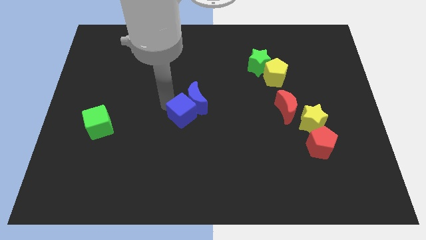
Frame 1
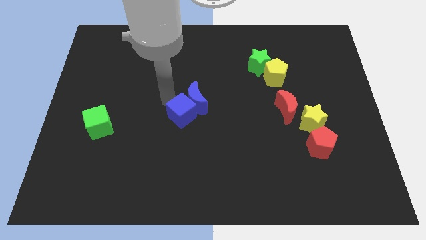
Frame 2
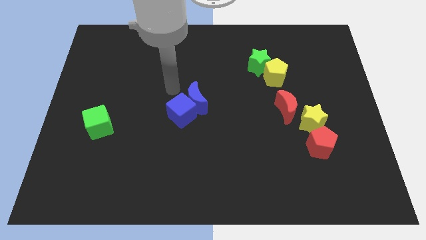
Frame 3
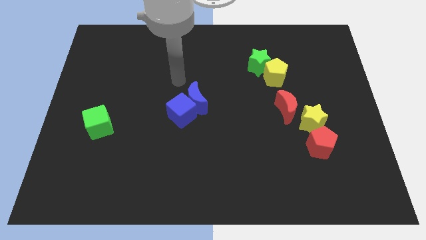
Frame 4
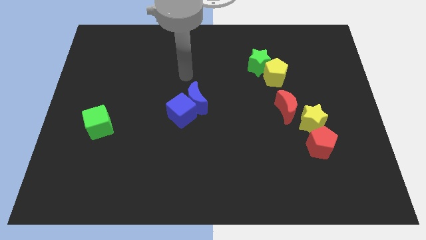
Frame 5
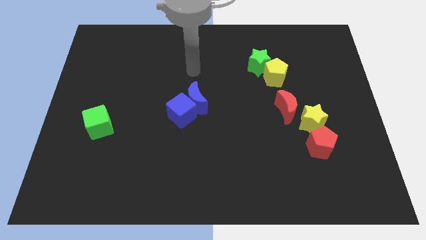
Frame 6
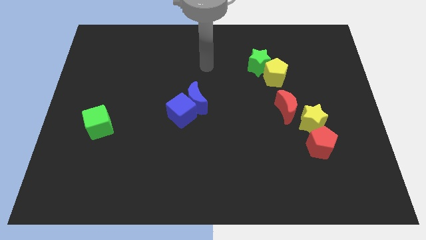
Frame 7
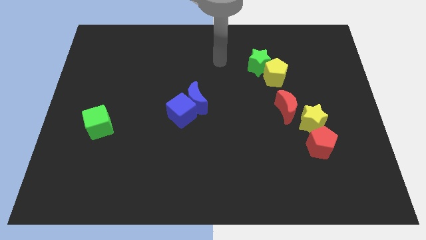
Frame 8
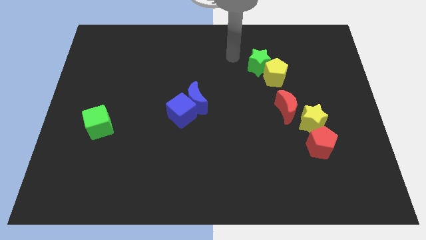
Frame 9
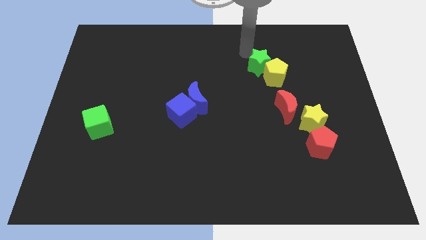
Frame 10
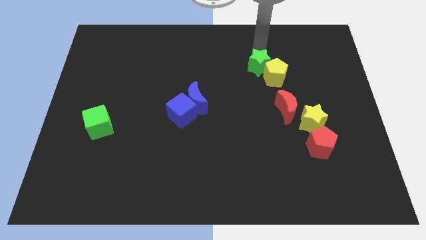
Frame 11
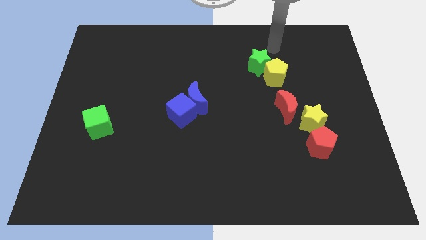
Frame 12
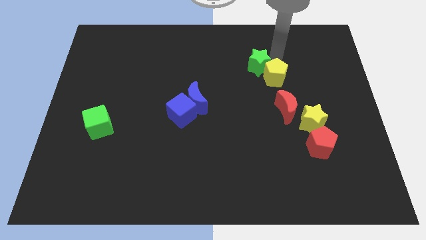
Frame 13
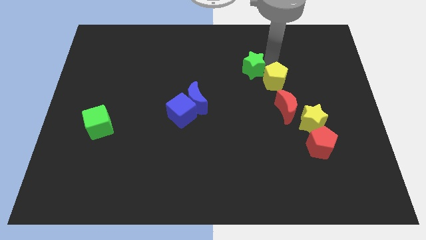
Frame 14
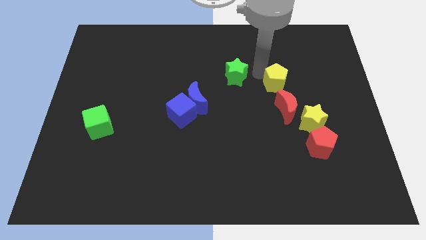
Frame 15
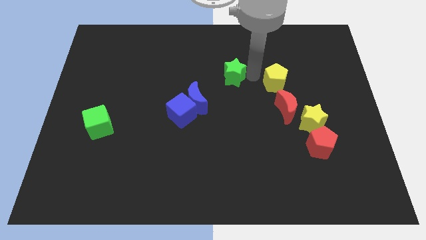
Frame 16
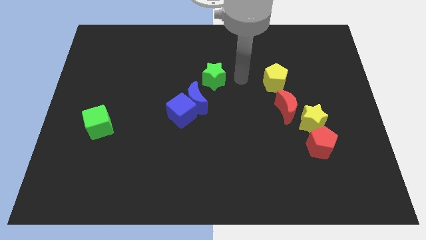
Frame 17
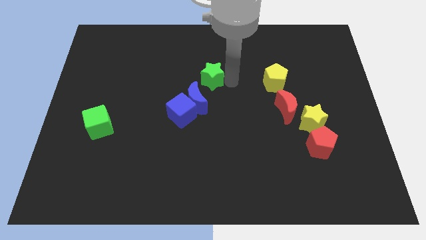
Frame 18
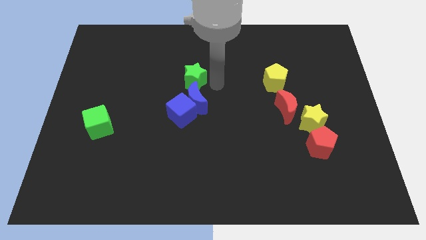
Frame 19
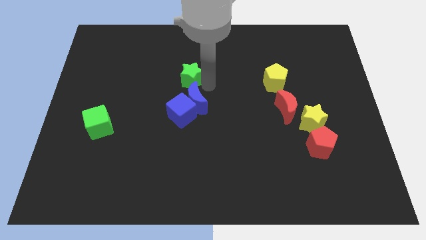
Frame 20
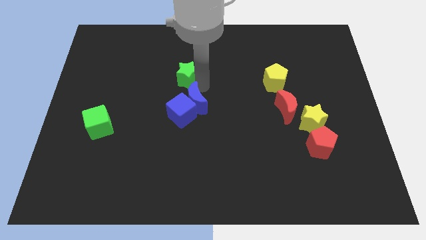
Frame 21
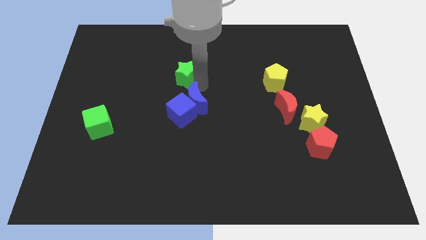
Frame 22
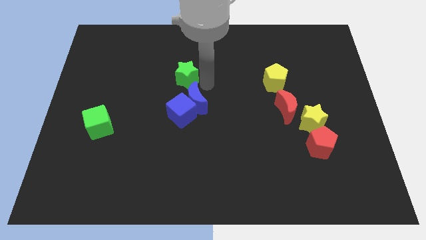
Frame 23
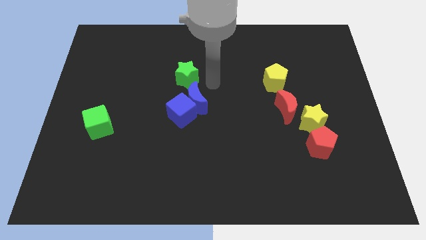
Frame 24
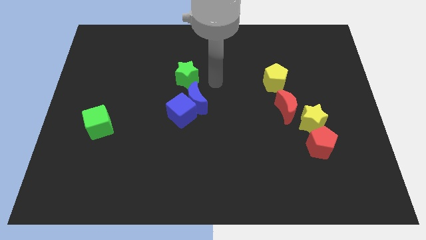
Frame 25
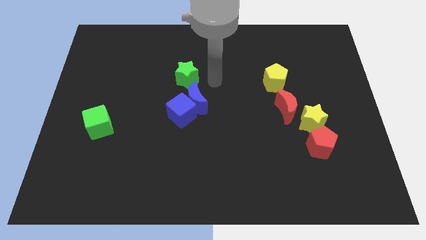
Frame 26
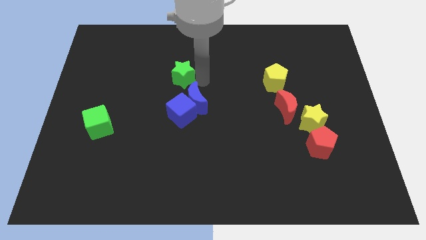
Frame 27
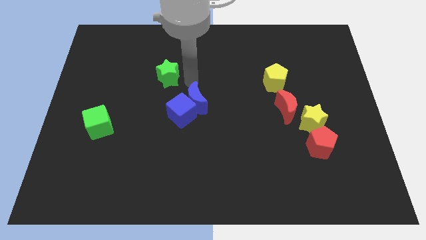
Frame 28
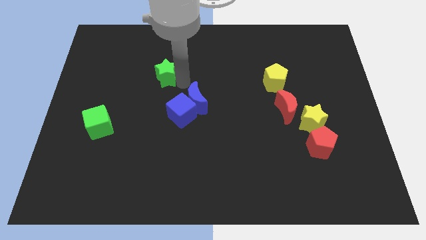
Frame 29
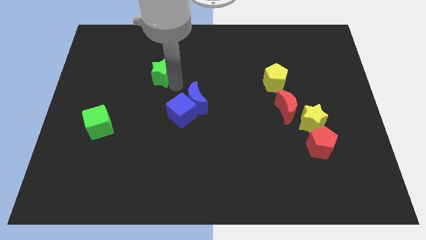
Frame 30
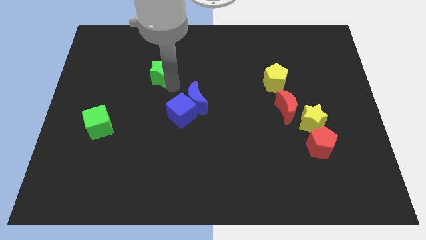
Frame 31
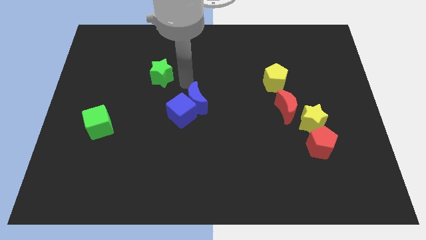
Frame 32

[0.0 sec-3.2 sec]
separate green star from yellow pentagon

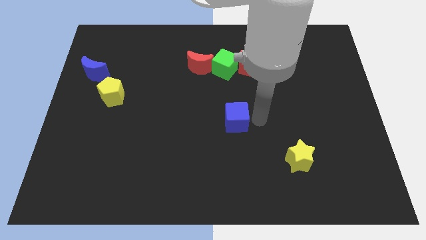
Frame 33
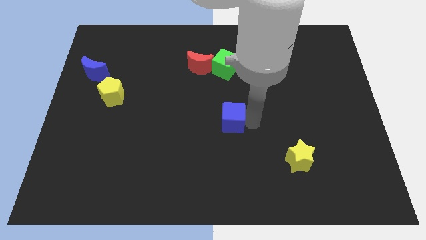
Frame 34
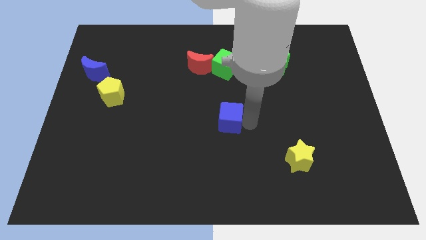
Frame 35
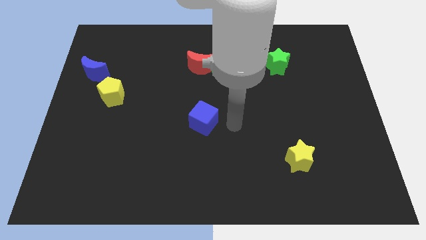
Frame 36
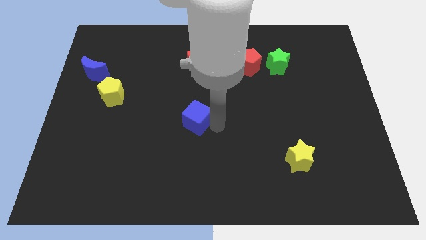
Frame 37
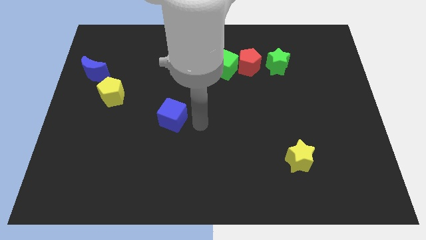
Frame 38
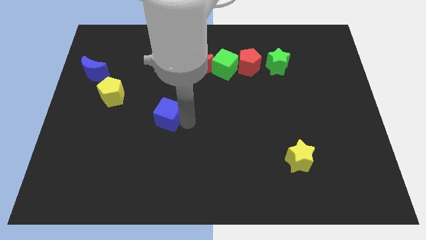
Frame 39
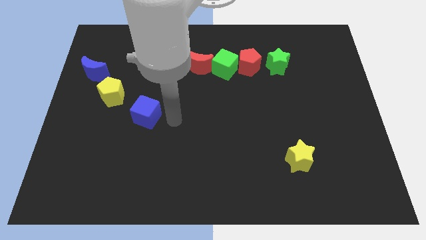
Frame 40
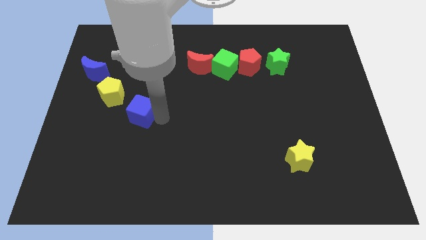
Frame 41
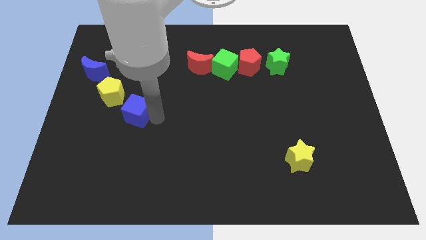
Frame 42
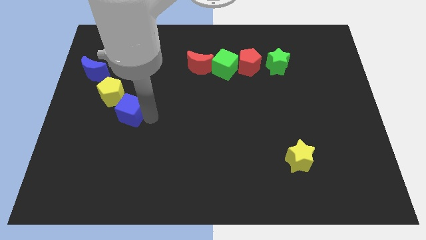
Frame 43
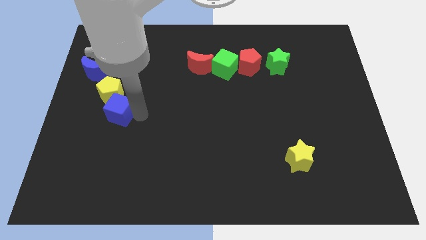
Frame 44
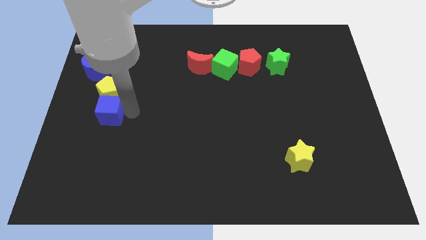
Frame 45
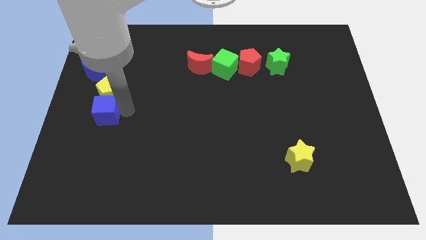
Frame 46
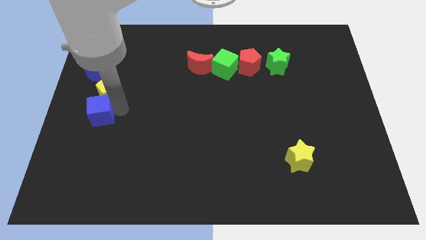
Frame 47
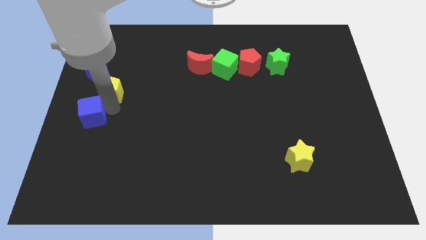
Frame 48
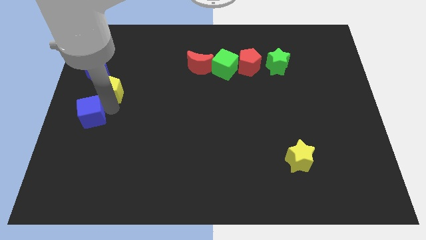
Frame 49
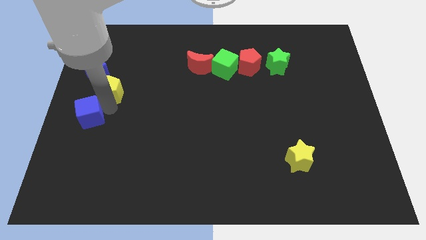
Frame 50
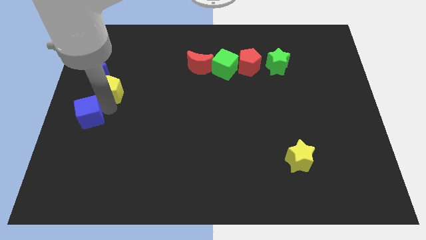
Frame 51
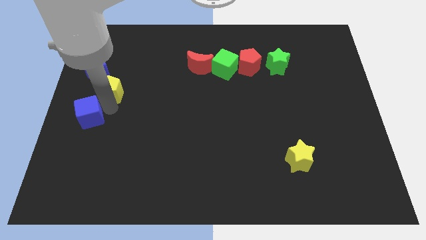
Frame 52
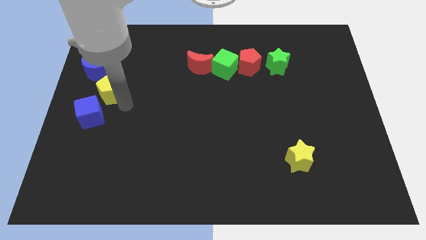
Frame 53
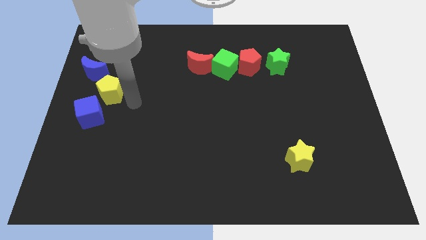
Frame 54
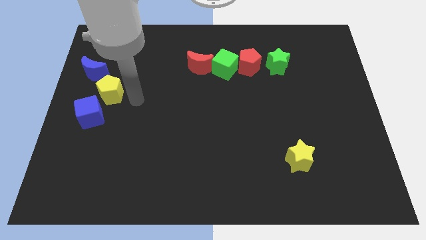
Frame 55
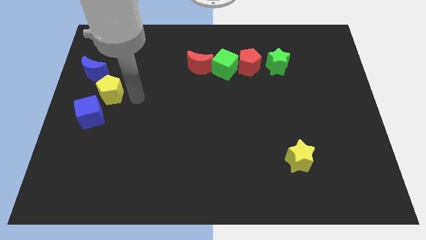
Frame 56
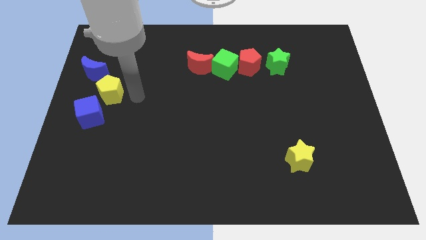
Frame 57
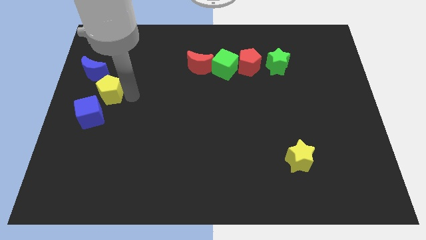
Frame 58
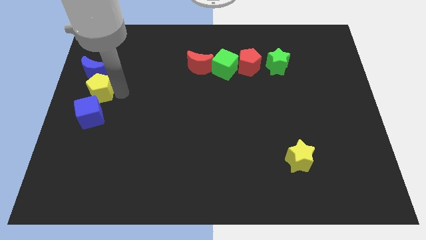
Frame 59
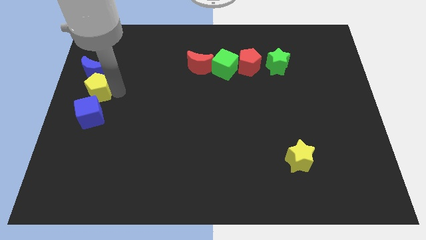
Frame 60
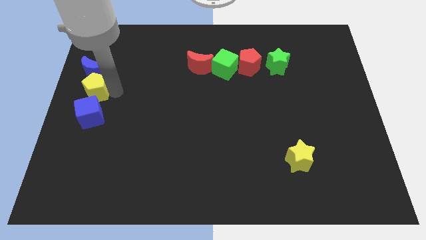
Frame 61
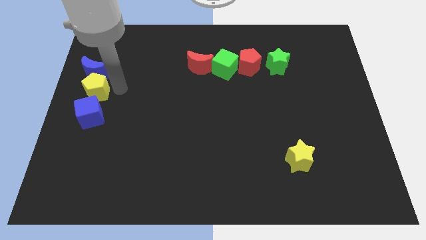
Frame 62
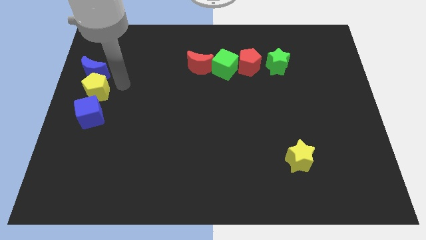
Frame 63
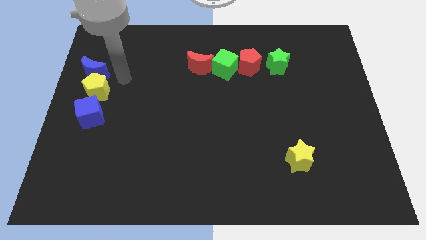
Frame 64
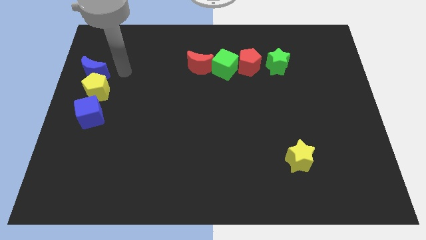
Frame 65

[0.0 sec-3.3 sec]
slightly move the yellow pentagon to the left

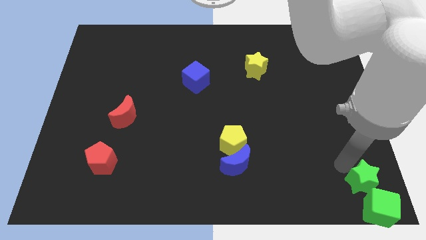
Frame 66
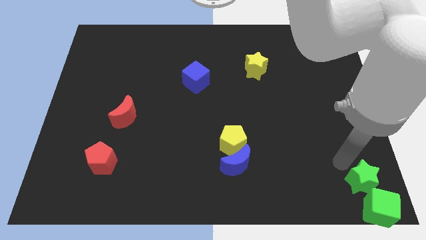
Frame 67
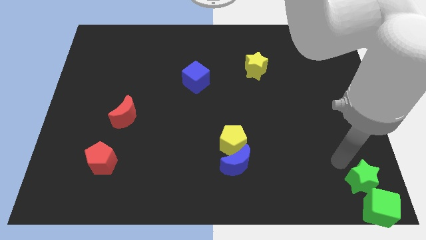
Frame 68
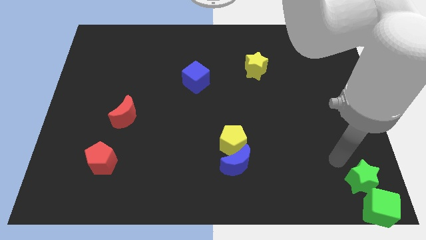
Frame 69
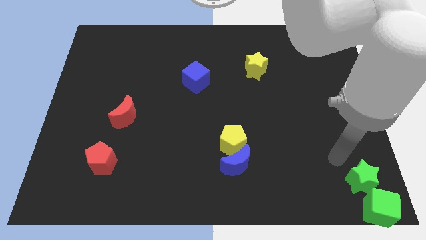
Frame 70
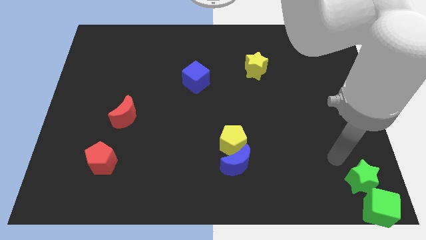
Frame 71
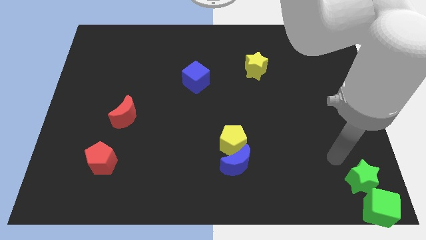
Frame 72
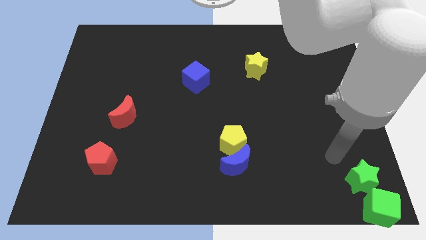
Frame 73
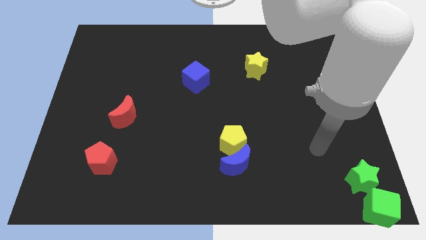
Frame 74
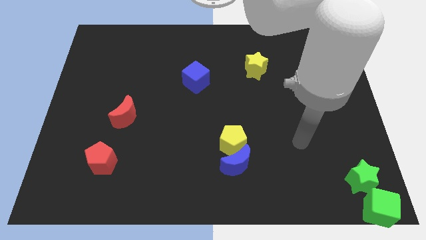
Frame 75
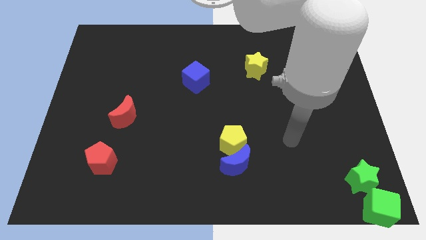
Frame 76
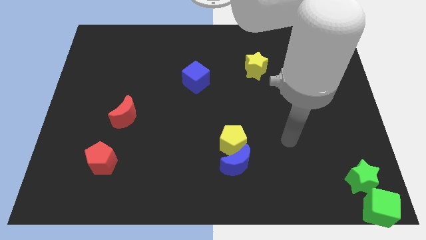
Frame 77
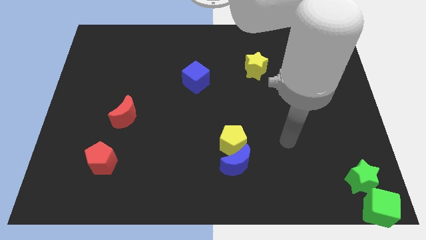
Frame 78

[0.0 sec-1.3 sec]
take your hand away from the green star

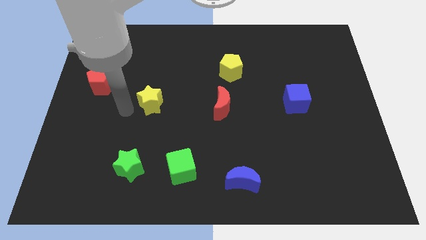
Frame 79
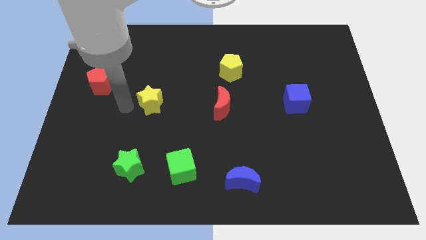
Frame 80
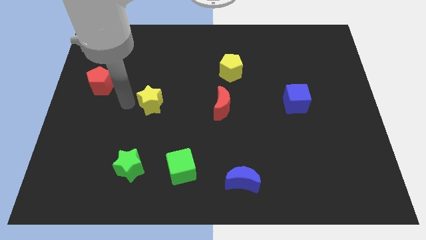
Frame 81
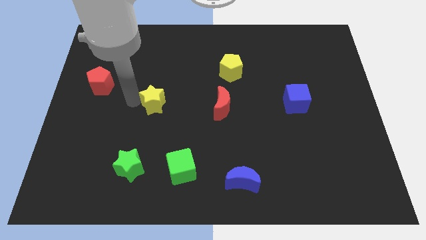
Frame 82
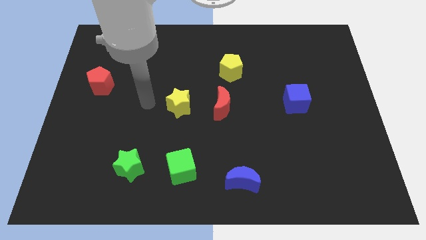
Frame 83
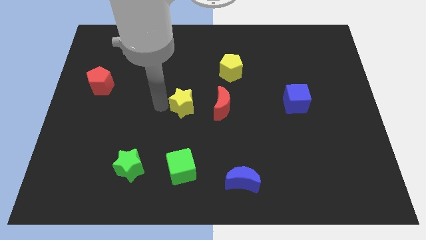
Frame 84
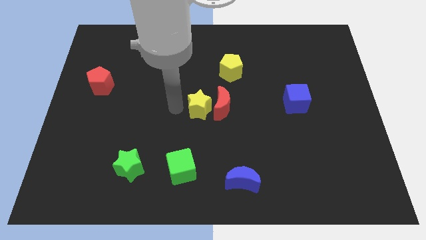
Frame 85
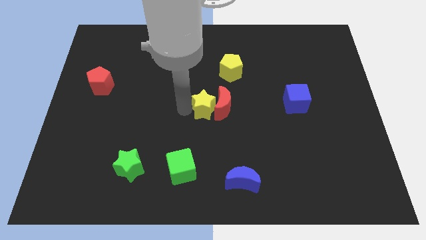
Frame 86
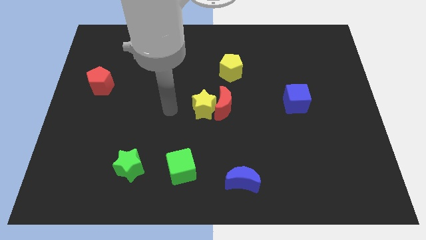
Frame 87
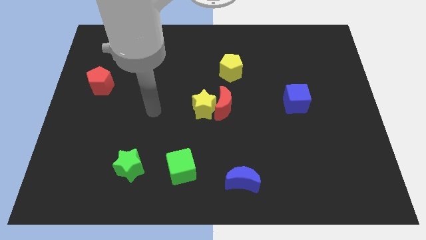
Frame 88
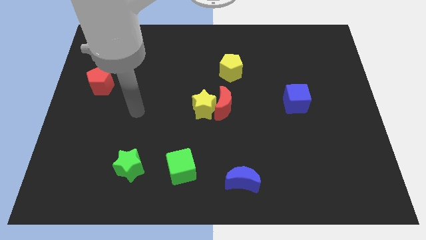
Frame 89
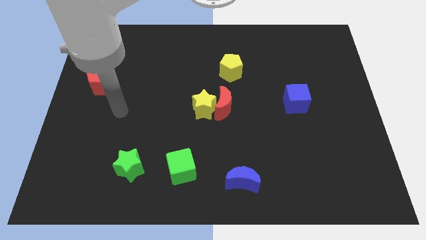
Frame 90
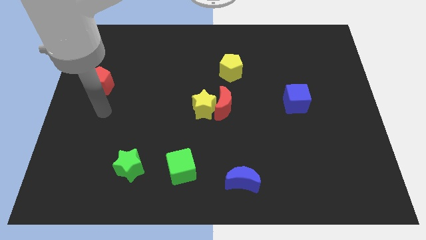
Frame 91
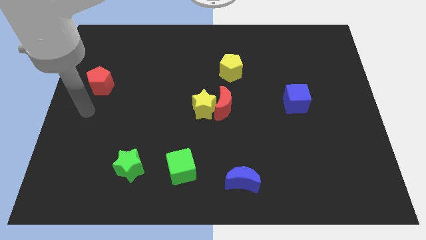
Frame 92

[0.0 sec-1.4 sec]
move yellow star into red moon
